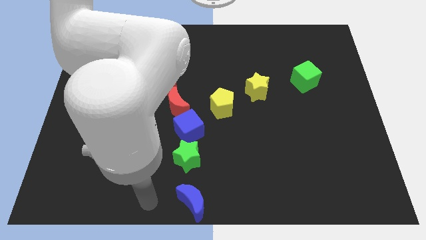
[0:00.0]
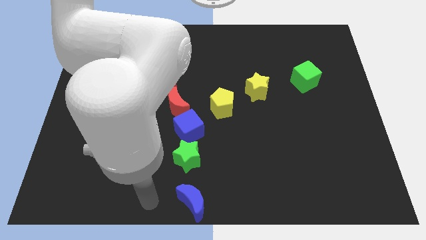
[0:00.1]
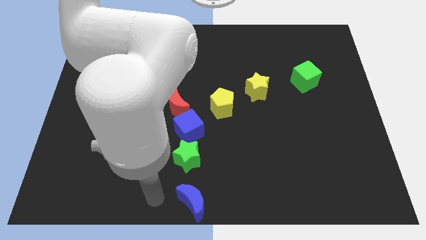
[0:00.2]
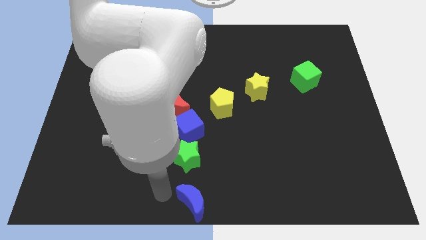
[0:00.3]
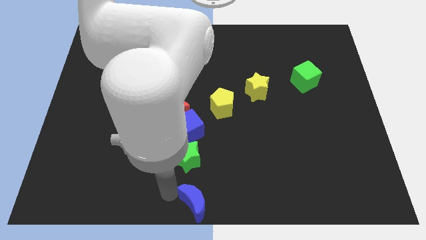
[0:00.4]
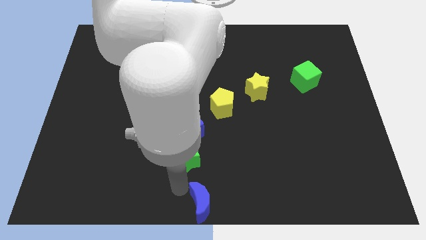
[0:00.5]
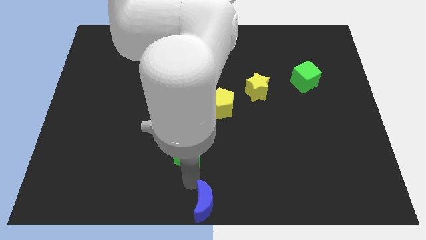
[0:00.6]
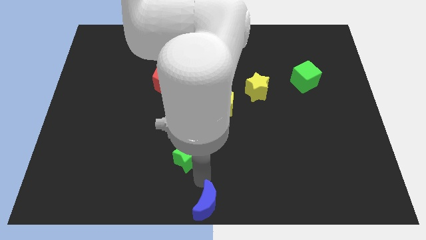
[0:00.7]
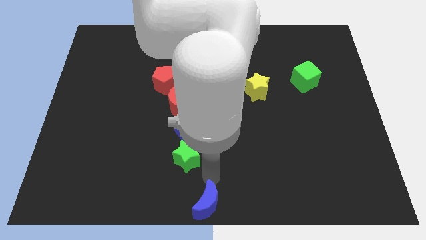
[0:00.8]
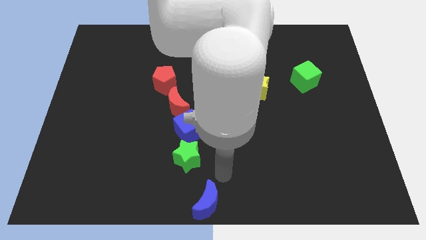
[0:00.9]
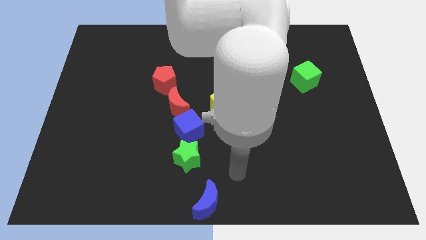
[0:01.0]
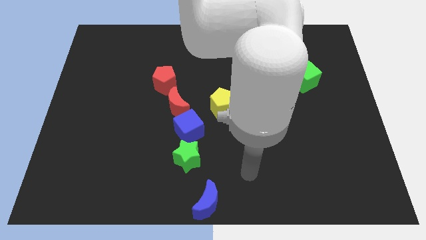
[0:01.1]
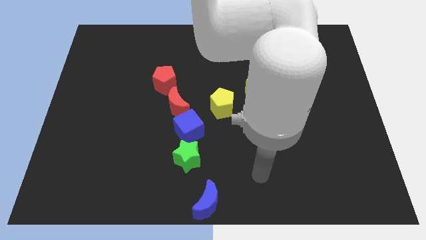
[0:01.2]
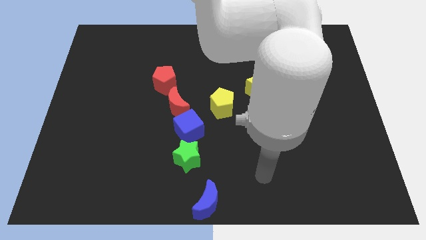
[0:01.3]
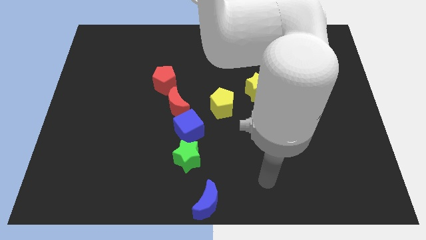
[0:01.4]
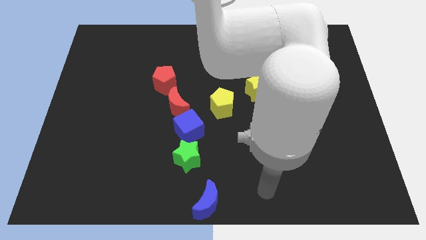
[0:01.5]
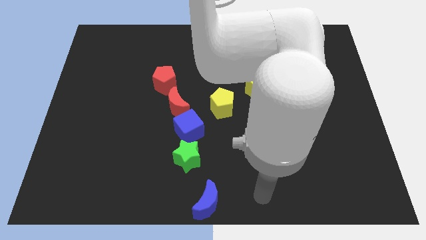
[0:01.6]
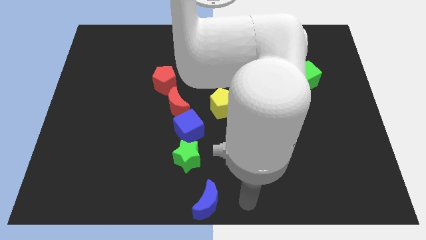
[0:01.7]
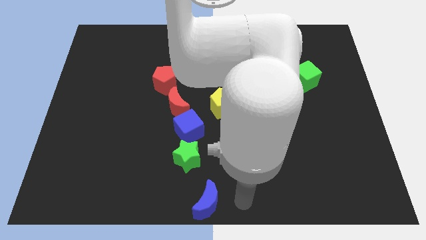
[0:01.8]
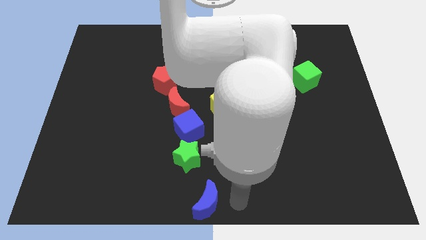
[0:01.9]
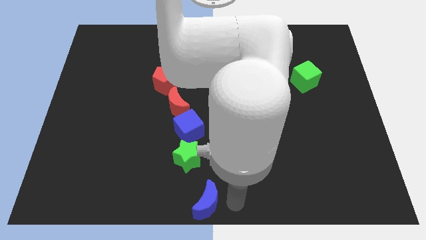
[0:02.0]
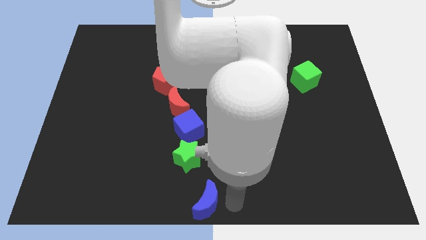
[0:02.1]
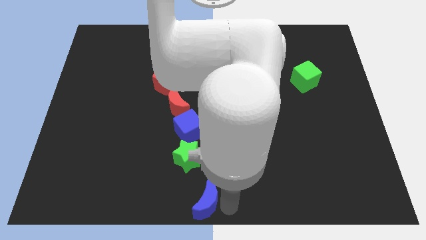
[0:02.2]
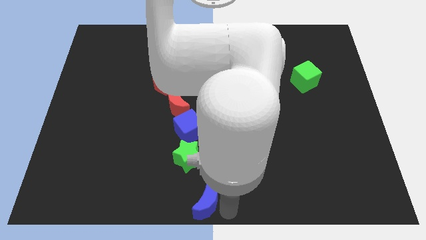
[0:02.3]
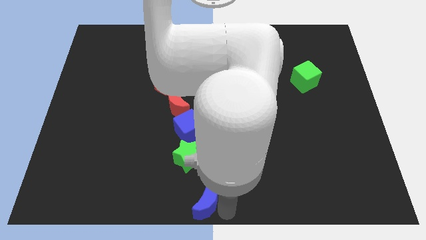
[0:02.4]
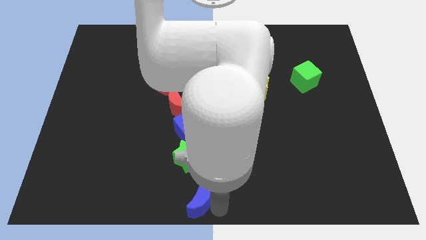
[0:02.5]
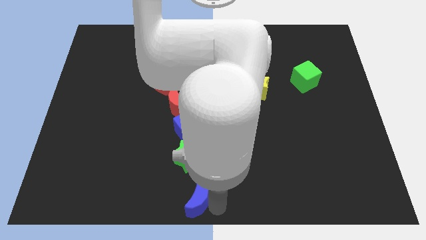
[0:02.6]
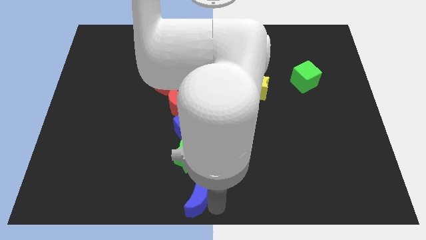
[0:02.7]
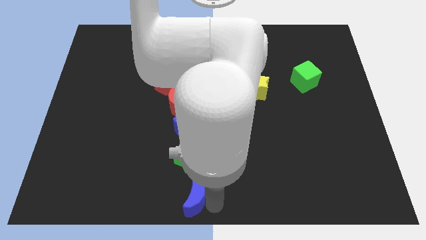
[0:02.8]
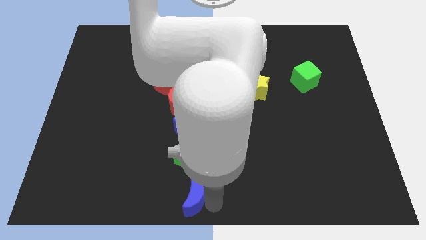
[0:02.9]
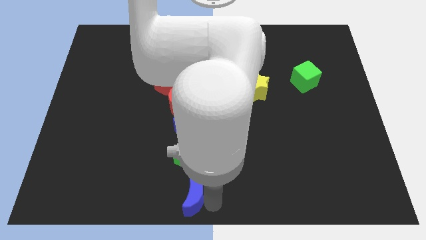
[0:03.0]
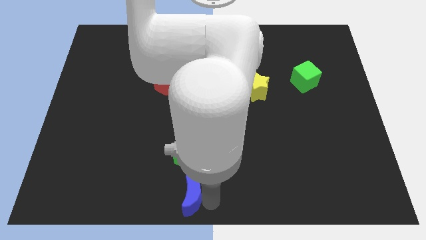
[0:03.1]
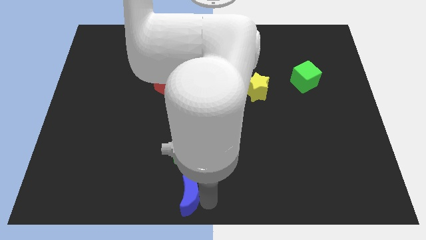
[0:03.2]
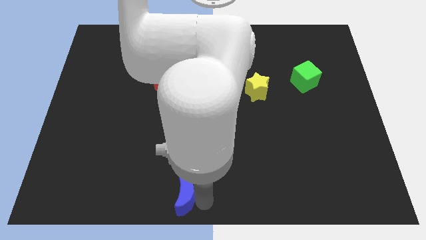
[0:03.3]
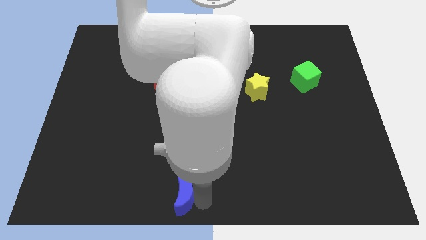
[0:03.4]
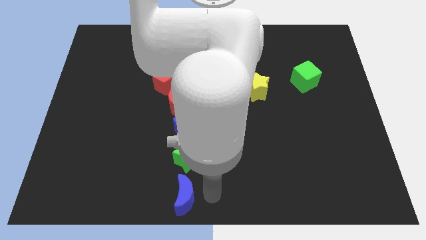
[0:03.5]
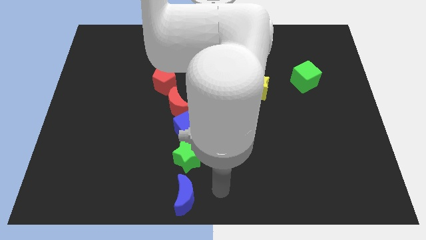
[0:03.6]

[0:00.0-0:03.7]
move the blue moon below to the green star

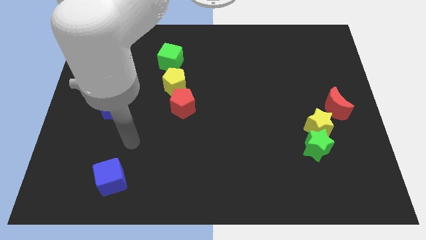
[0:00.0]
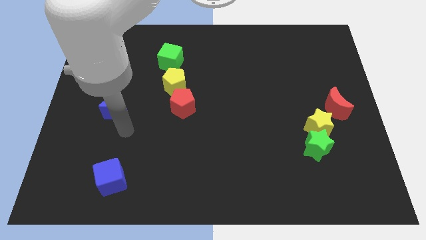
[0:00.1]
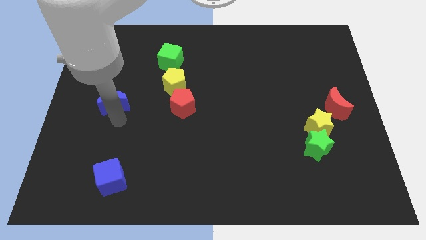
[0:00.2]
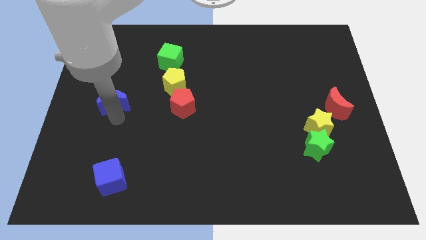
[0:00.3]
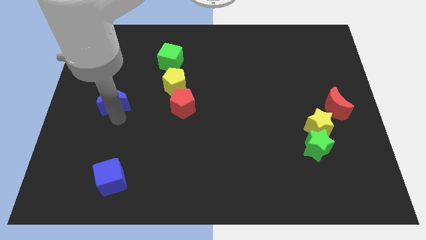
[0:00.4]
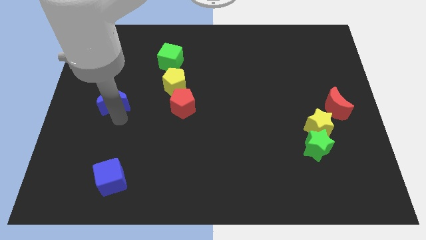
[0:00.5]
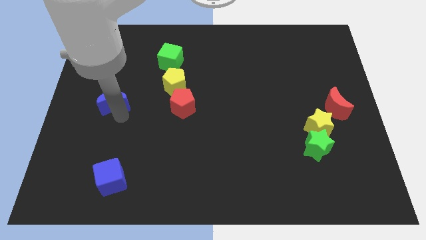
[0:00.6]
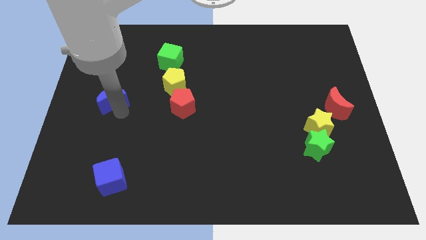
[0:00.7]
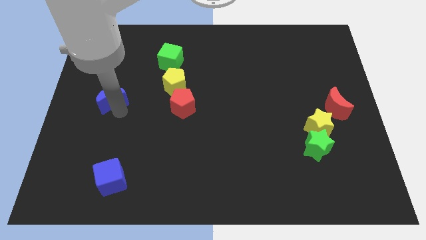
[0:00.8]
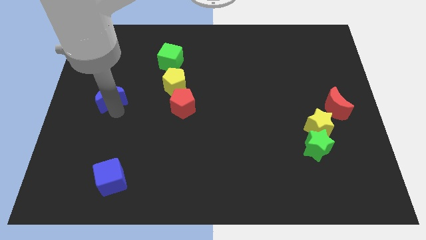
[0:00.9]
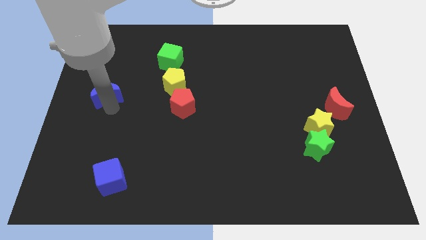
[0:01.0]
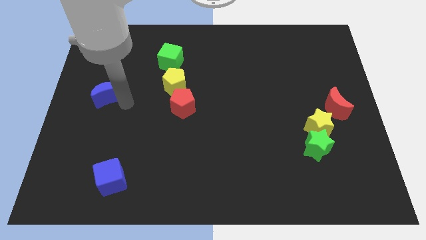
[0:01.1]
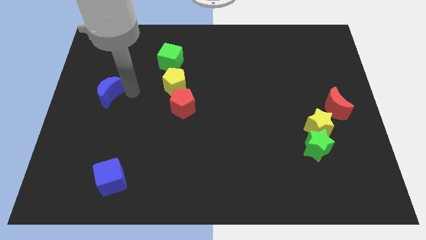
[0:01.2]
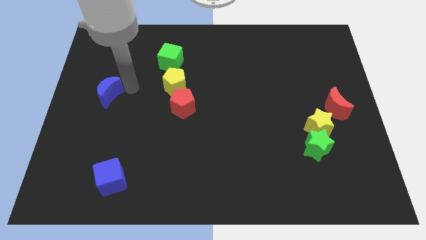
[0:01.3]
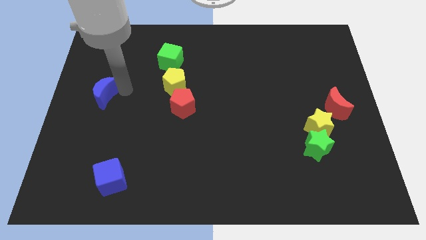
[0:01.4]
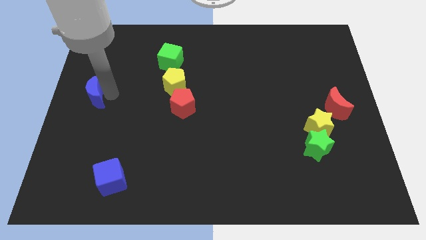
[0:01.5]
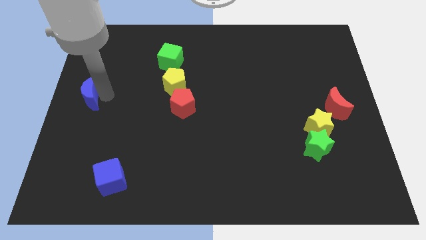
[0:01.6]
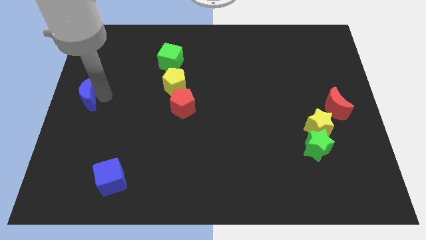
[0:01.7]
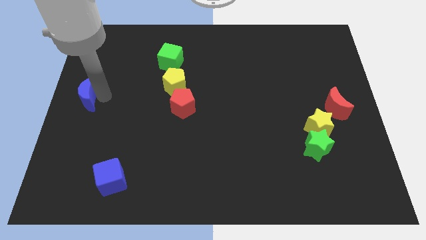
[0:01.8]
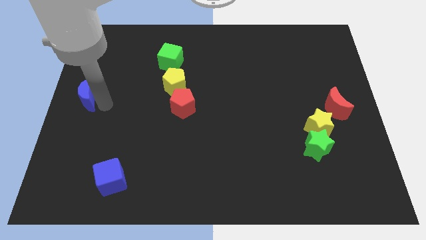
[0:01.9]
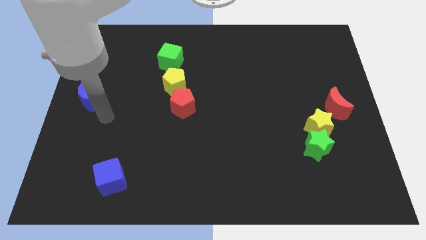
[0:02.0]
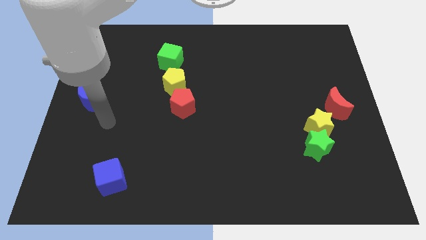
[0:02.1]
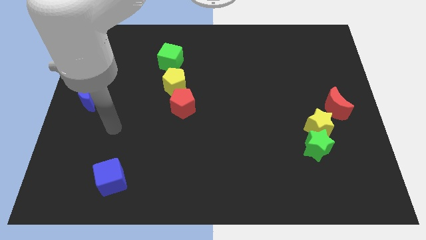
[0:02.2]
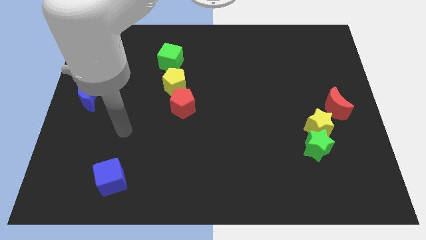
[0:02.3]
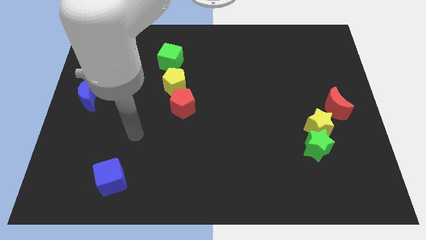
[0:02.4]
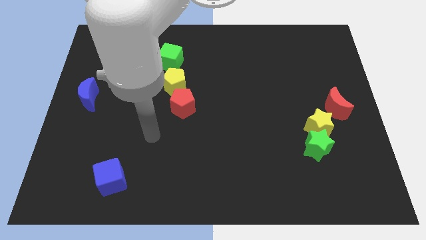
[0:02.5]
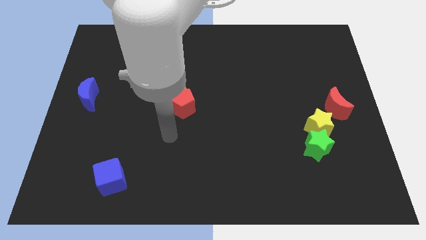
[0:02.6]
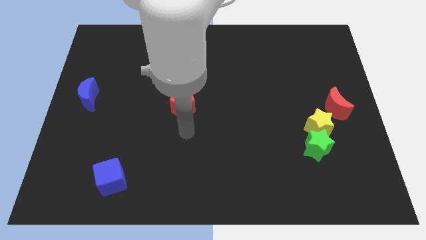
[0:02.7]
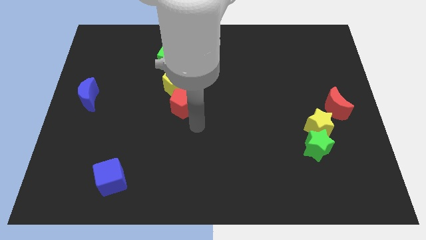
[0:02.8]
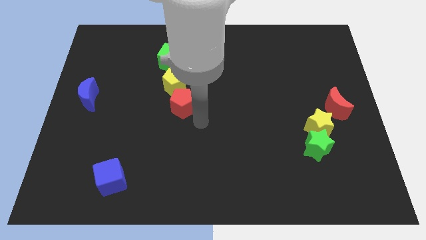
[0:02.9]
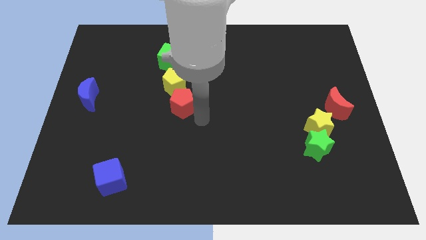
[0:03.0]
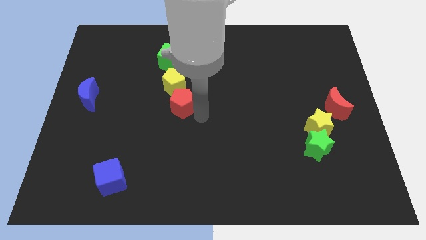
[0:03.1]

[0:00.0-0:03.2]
drag the blue moon towards left

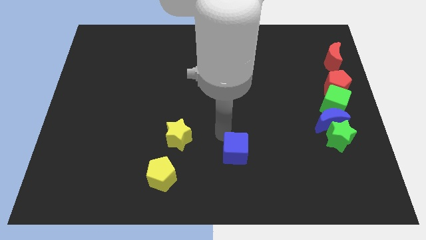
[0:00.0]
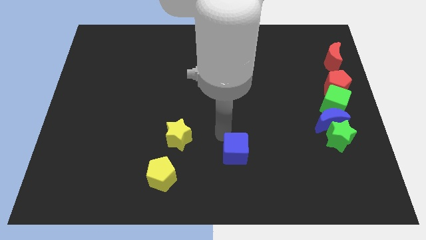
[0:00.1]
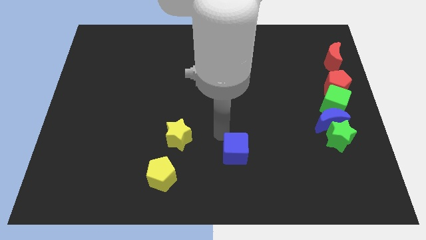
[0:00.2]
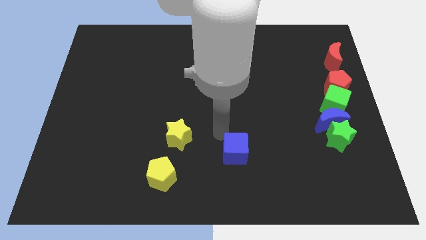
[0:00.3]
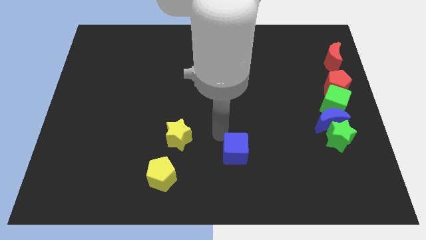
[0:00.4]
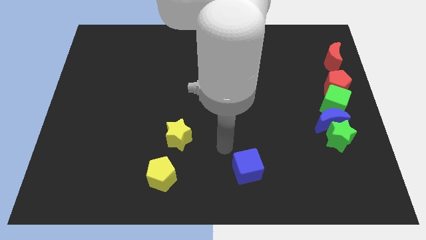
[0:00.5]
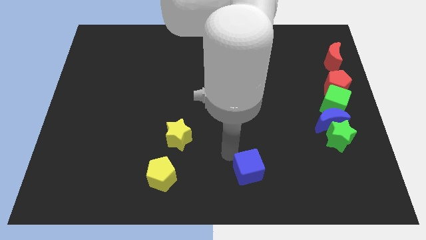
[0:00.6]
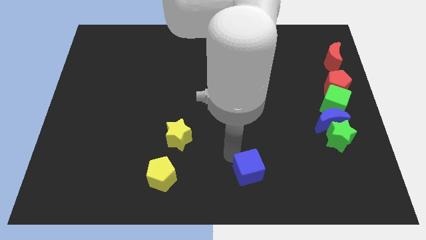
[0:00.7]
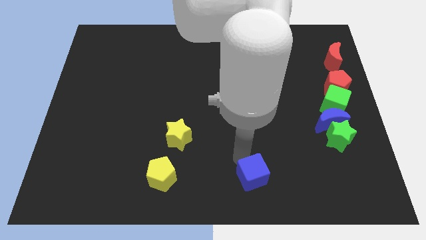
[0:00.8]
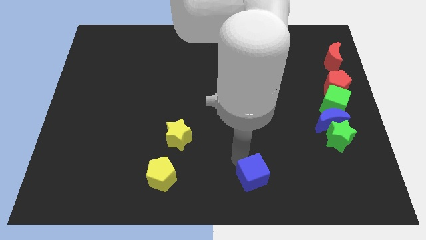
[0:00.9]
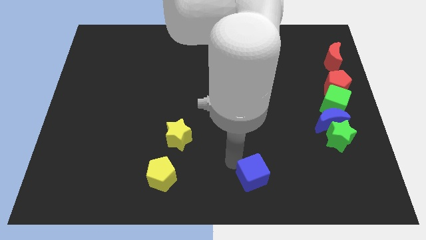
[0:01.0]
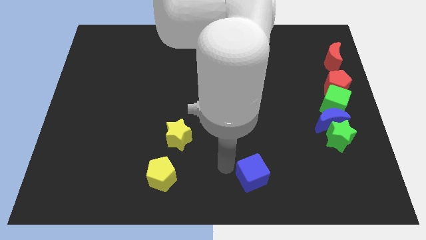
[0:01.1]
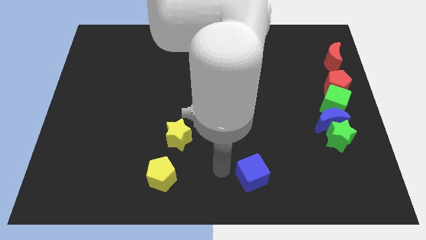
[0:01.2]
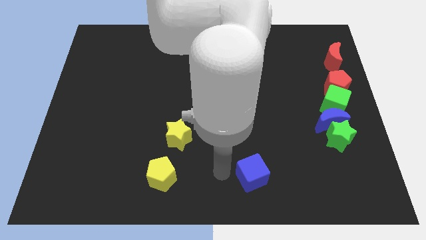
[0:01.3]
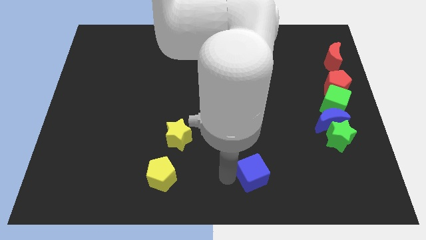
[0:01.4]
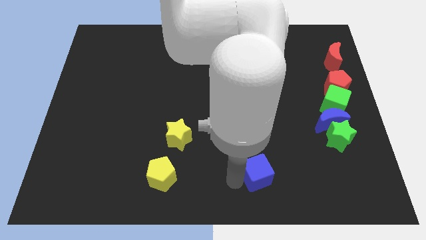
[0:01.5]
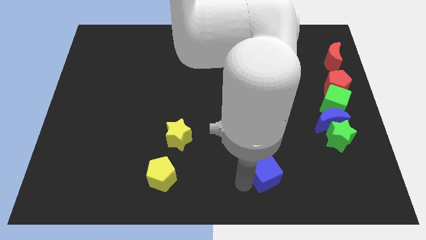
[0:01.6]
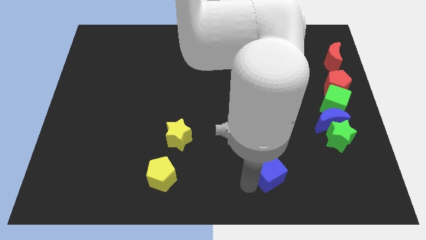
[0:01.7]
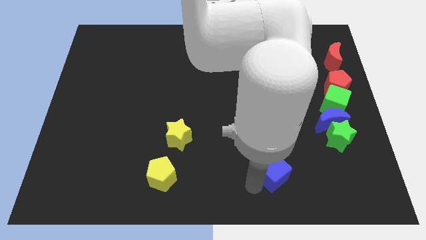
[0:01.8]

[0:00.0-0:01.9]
place the blue cube adjacent to the yellow pentagon

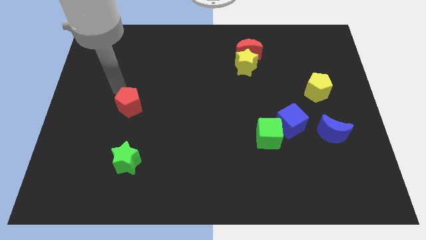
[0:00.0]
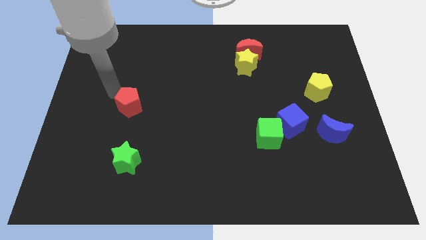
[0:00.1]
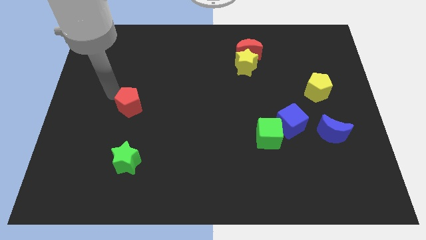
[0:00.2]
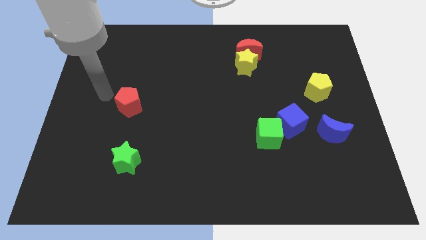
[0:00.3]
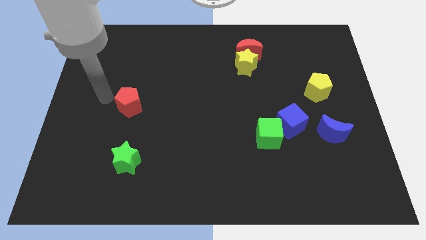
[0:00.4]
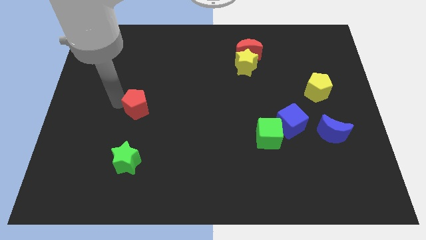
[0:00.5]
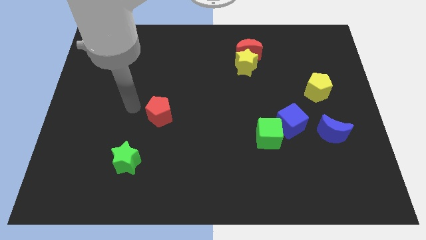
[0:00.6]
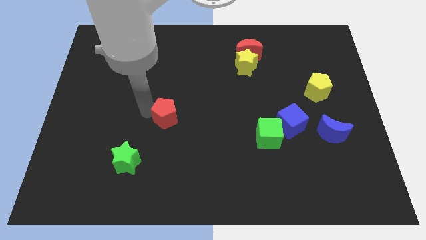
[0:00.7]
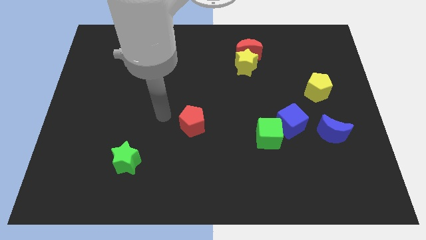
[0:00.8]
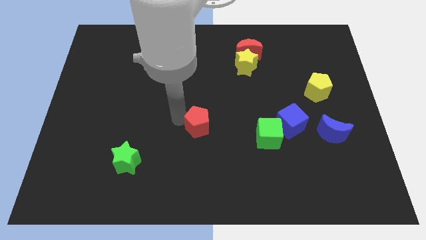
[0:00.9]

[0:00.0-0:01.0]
move the red pentagon towards center
